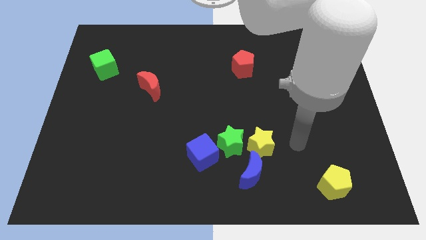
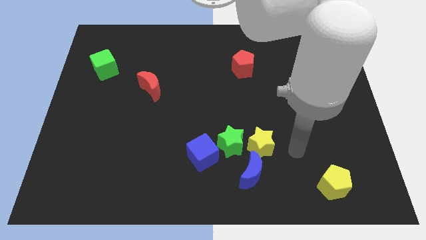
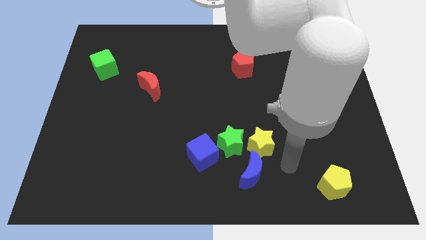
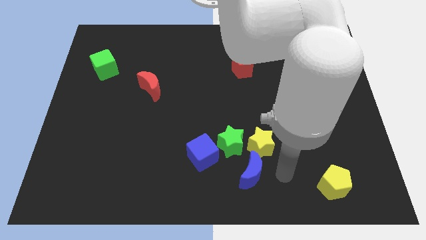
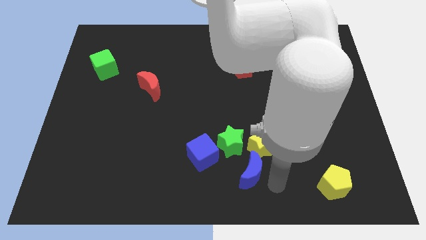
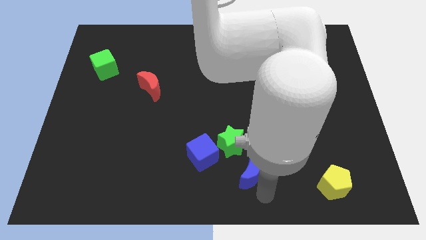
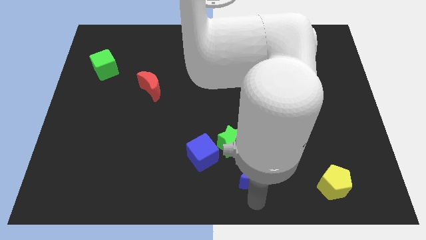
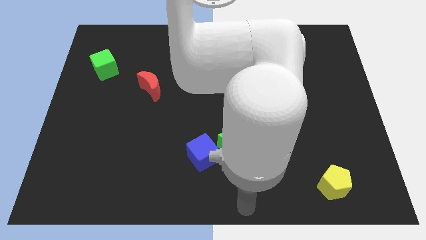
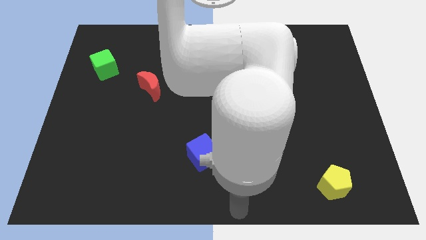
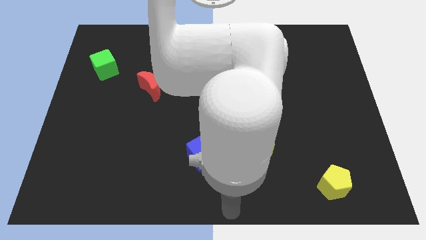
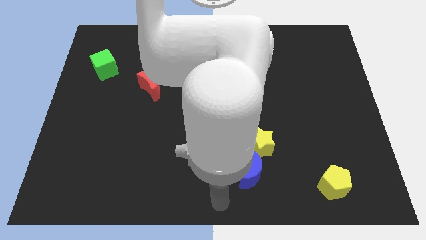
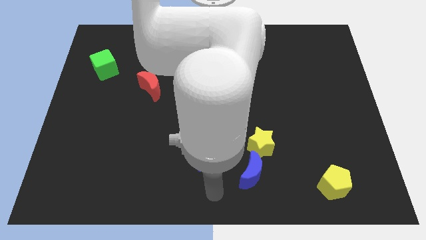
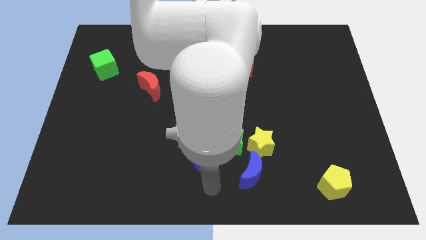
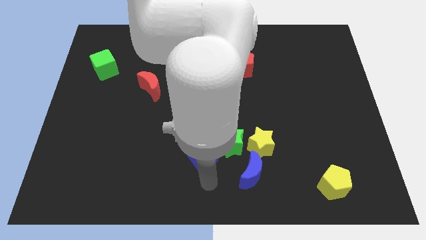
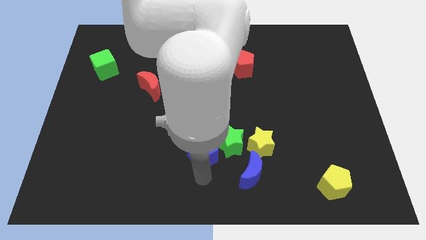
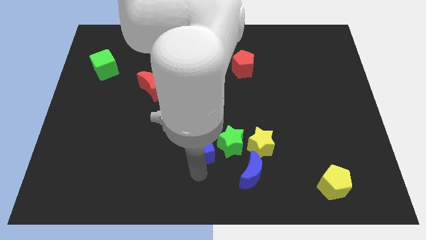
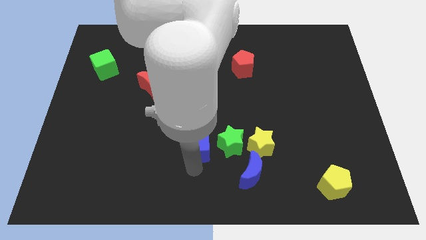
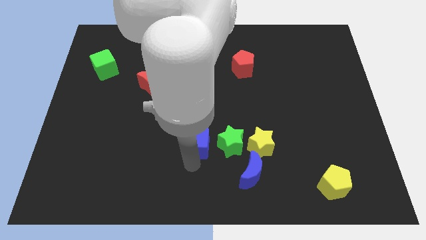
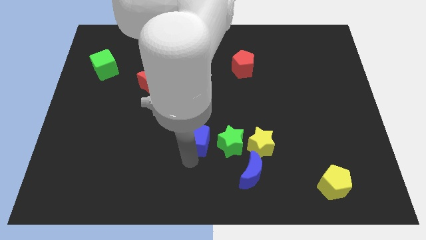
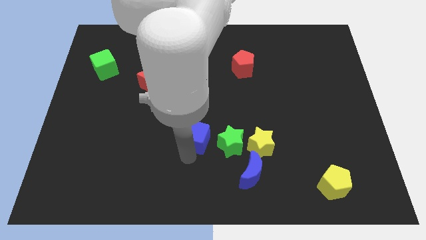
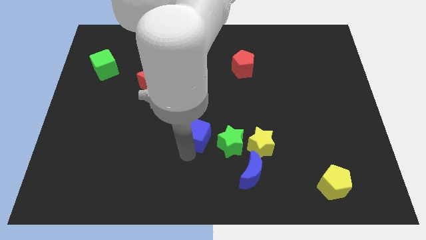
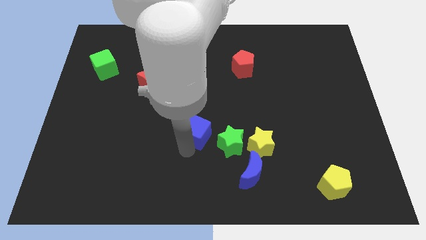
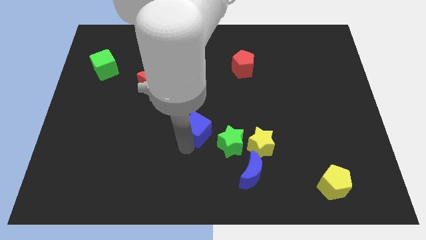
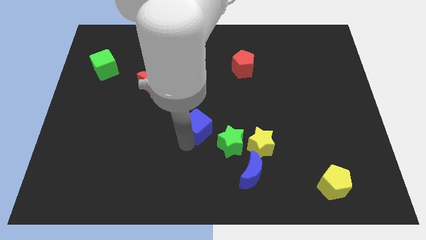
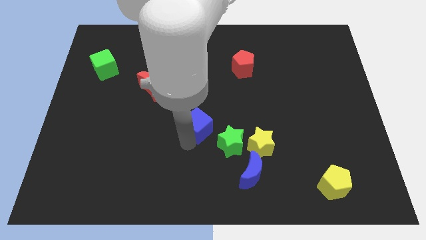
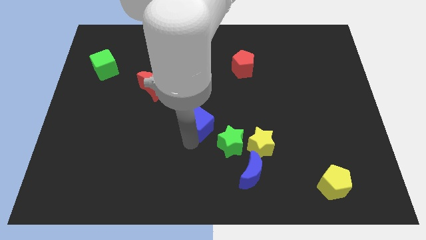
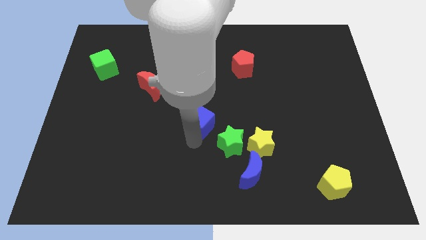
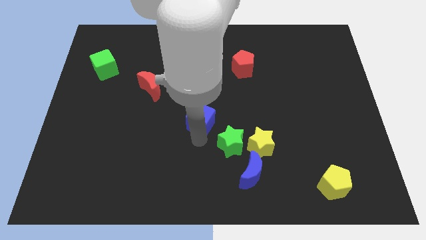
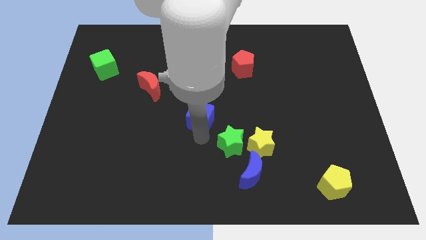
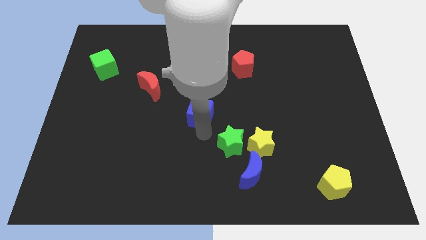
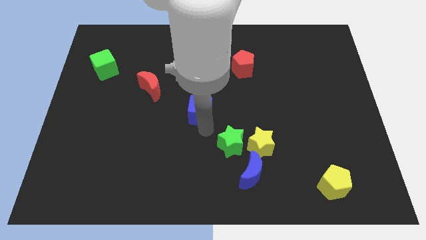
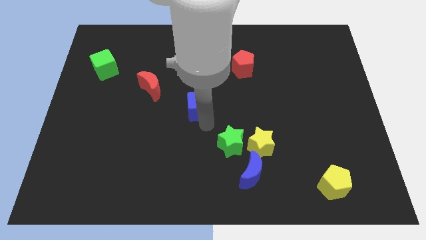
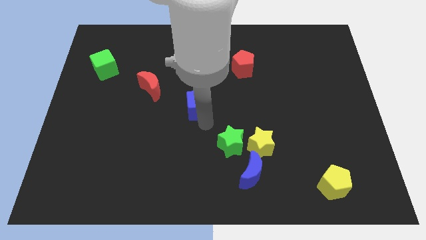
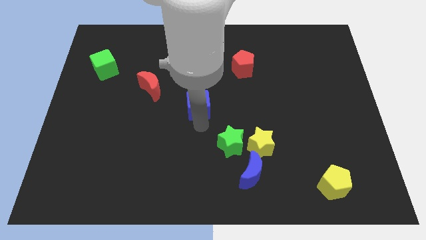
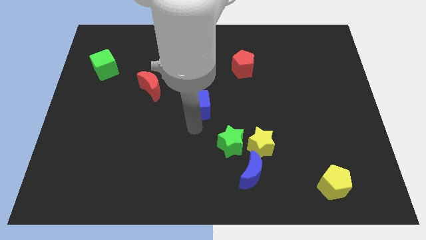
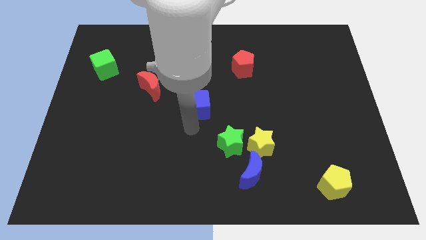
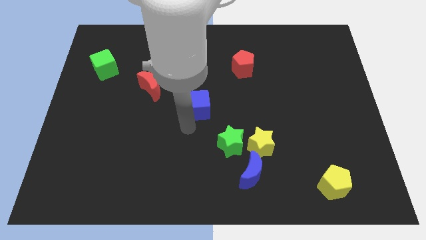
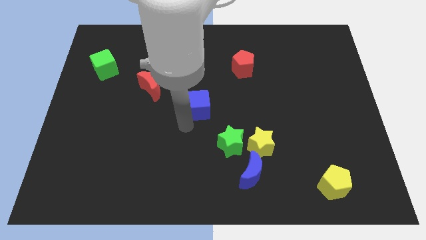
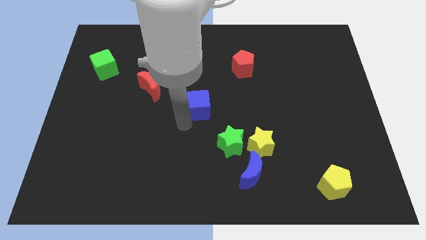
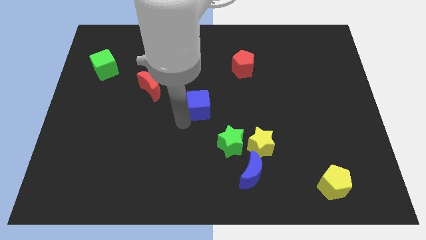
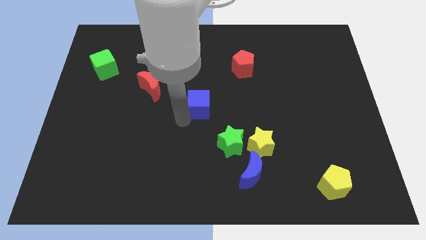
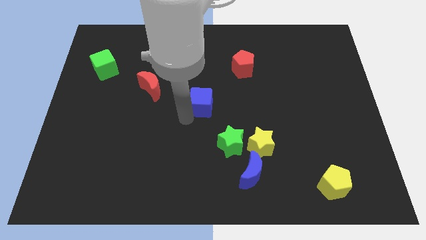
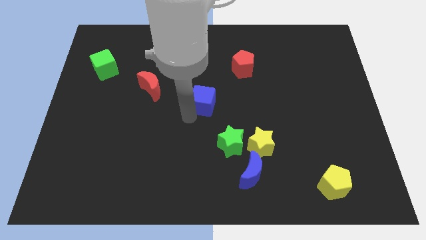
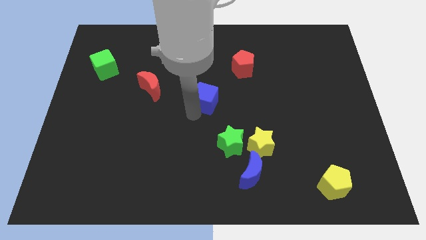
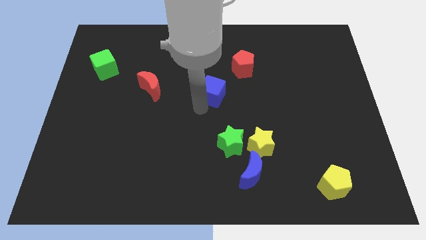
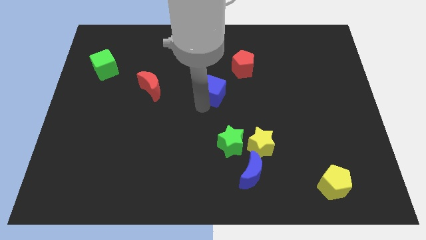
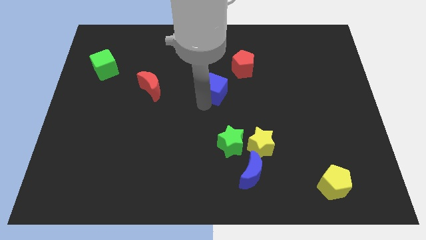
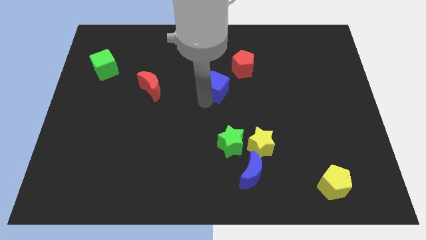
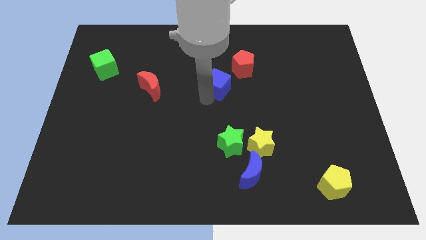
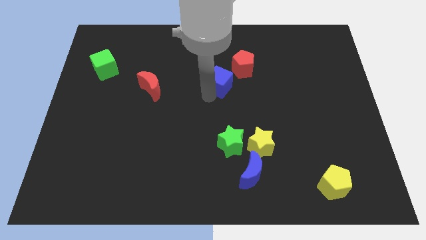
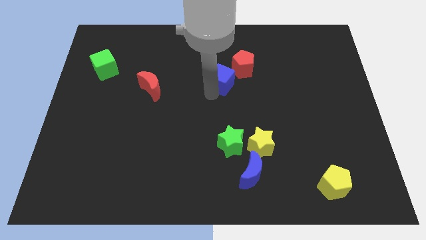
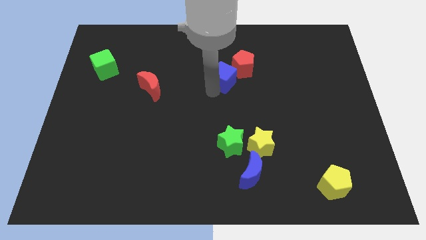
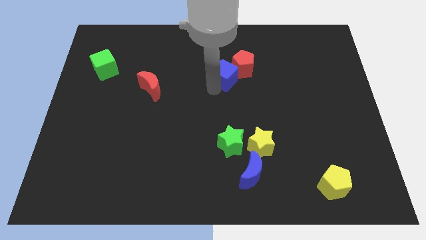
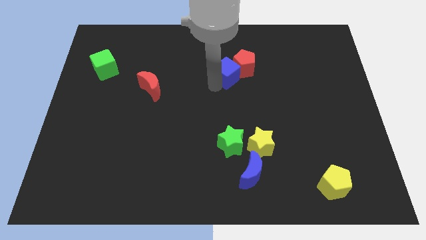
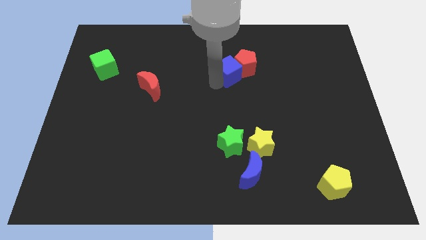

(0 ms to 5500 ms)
slide the blue cube next to the red pentagon

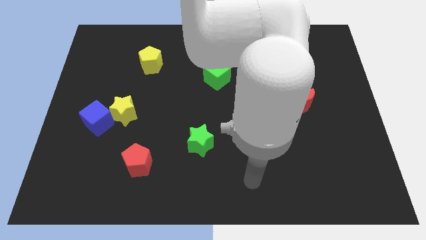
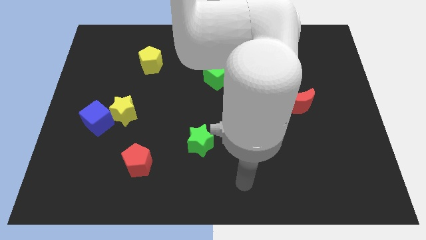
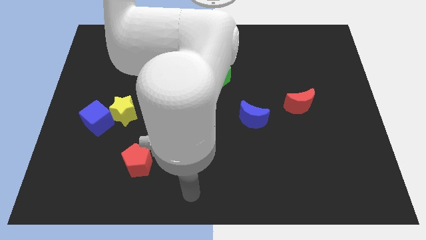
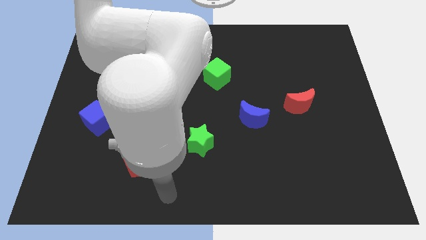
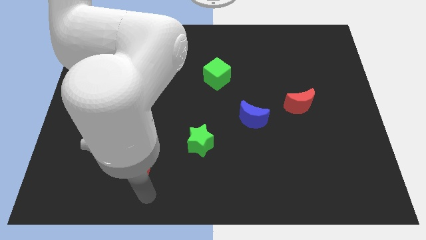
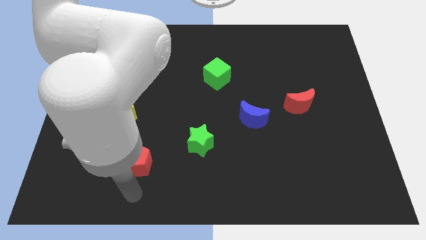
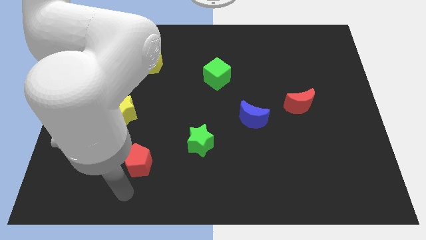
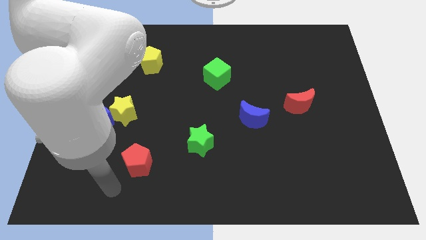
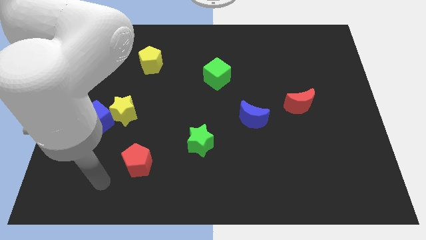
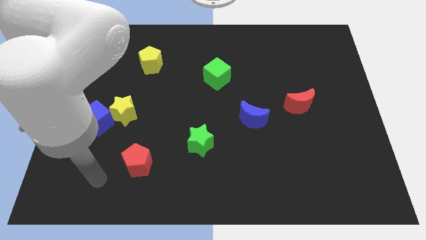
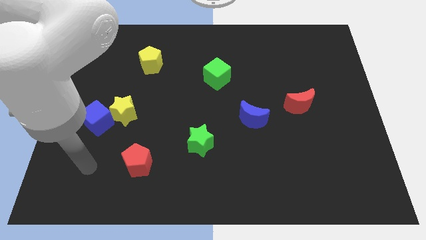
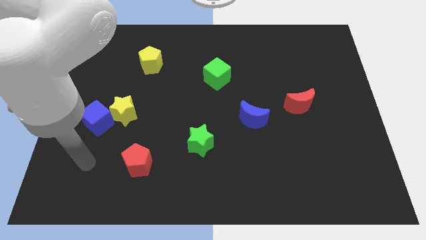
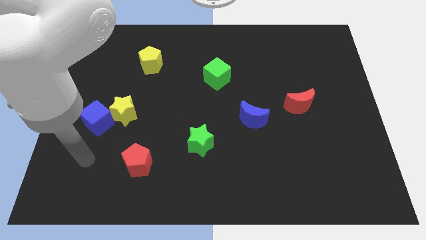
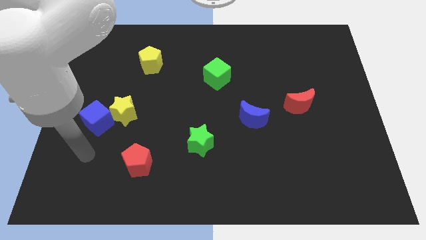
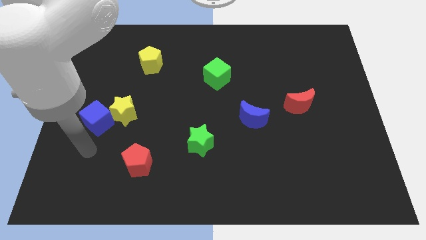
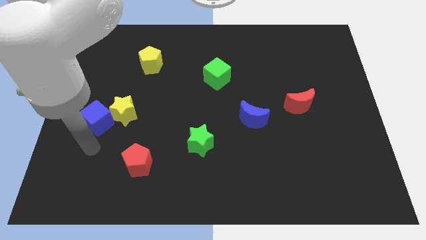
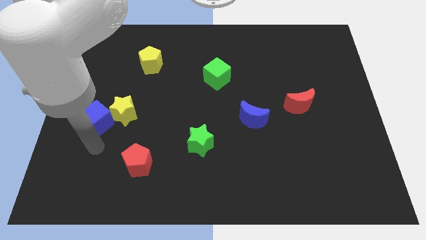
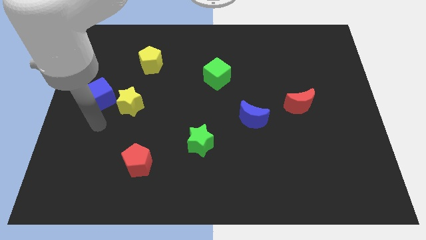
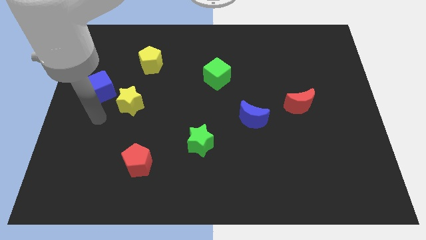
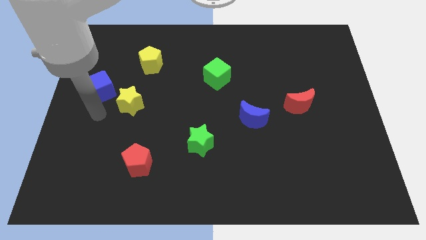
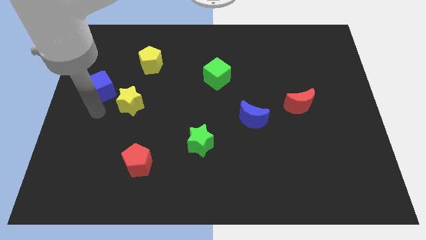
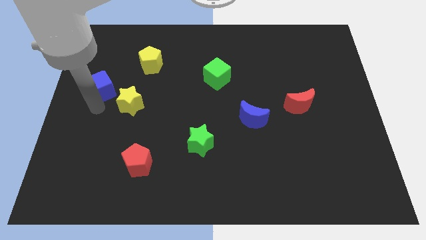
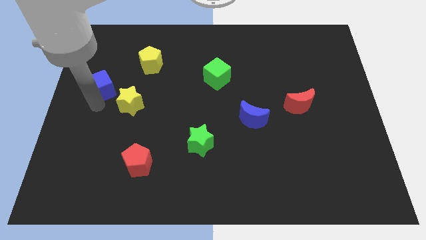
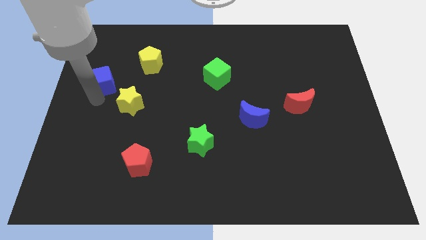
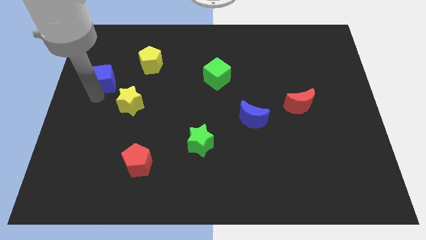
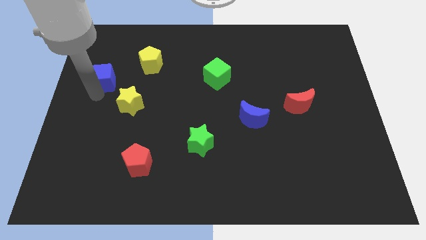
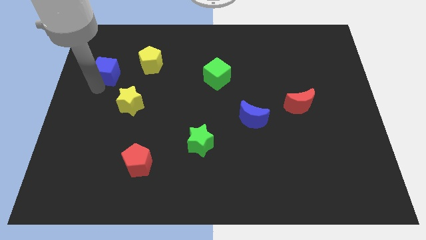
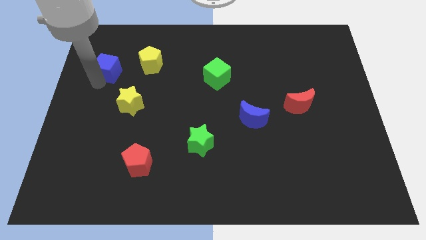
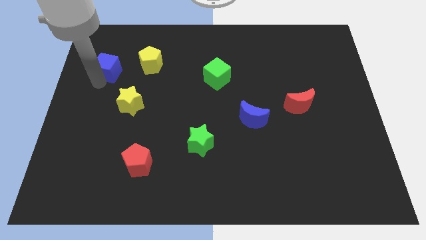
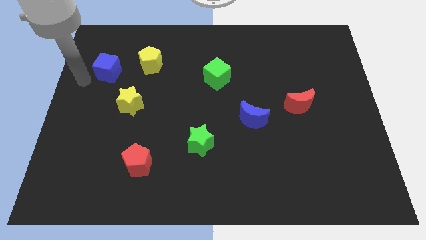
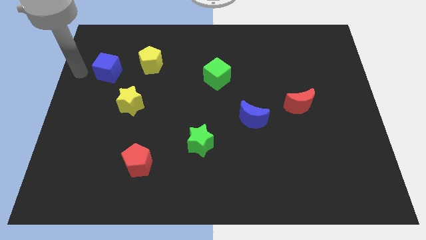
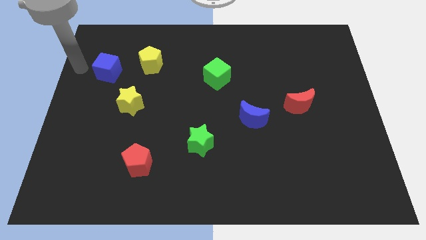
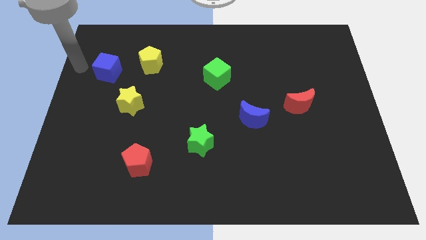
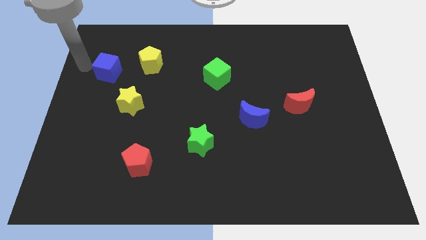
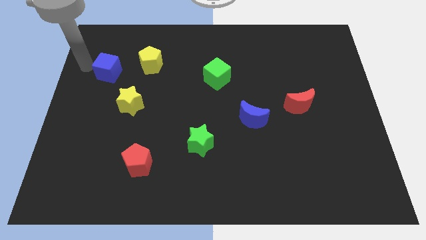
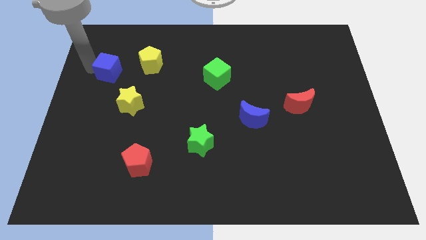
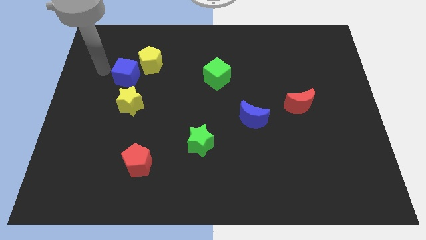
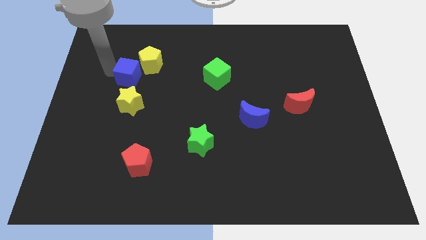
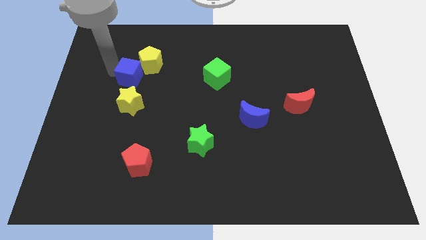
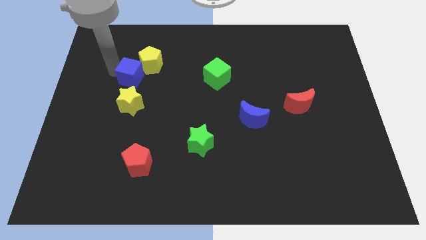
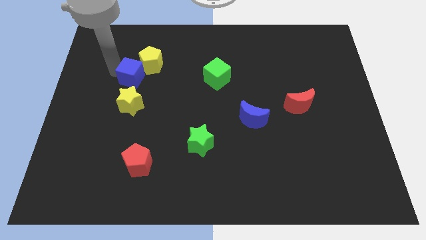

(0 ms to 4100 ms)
move the blue cube close to the yellow pentagon
